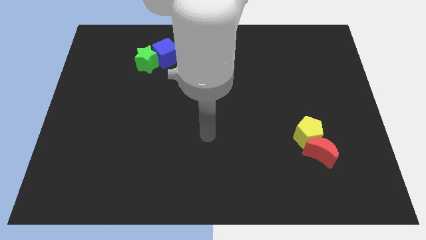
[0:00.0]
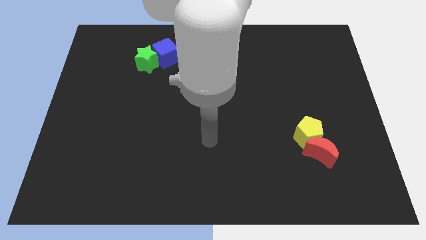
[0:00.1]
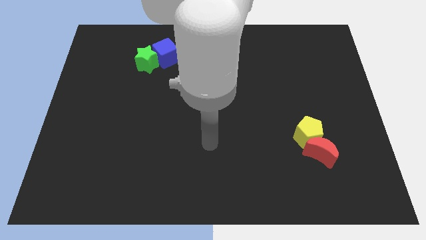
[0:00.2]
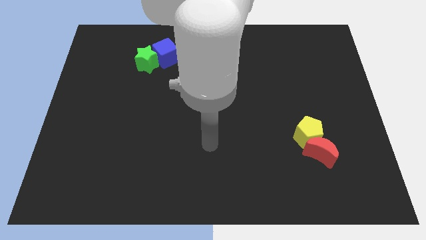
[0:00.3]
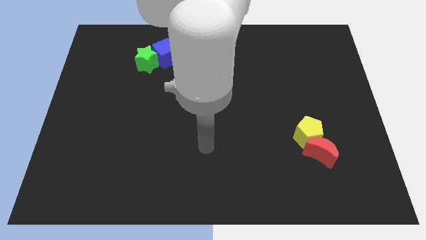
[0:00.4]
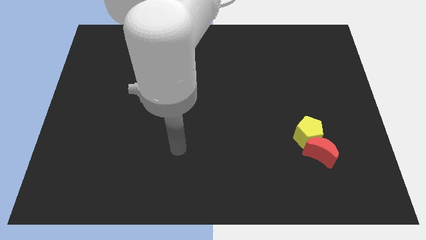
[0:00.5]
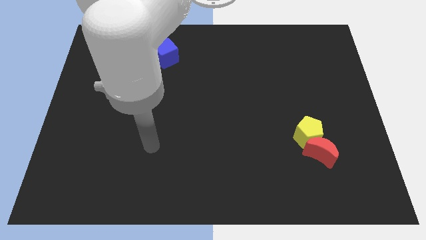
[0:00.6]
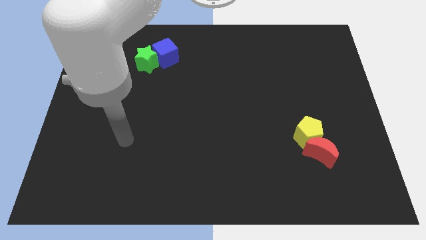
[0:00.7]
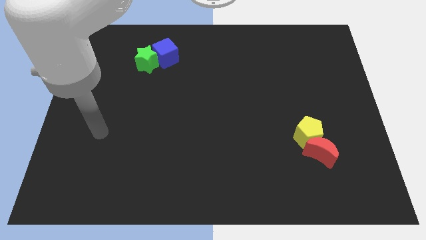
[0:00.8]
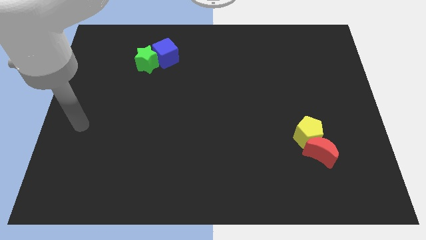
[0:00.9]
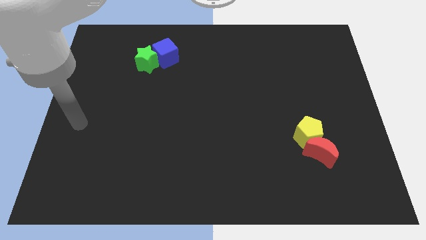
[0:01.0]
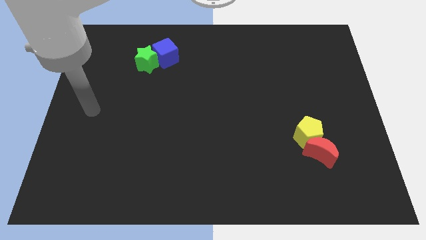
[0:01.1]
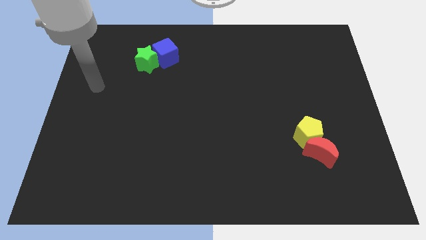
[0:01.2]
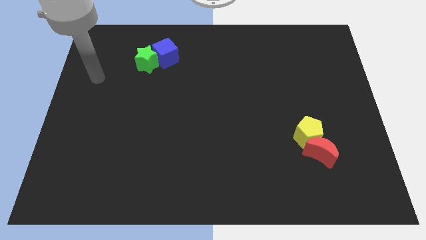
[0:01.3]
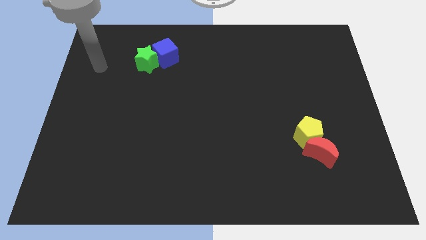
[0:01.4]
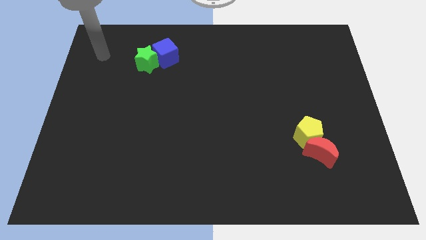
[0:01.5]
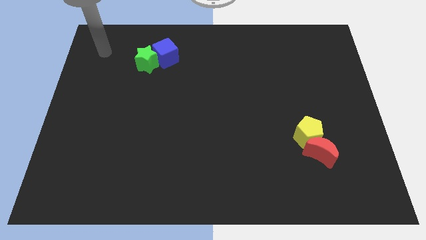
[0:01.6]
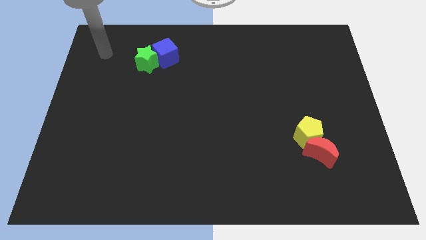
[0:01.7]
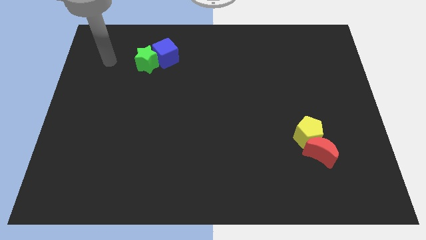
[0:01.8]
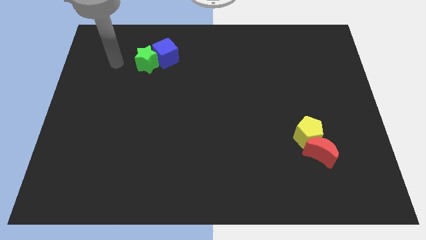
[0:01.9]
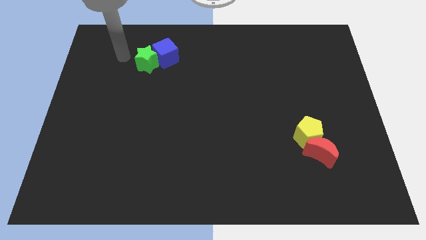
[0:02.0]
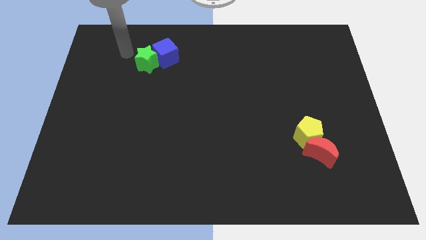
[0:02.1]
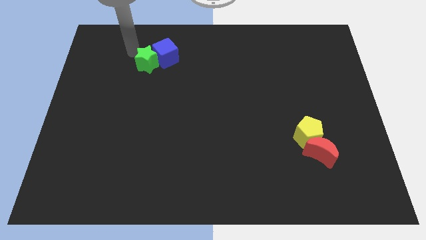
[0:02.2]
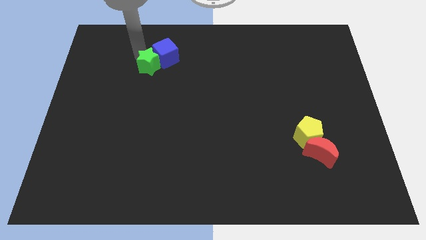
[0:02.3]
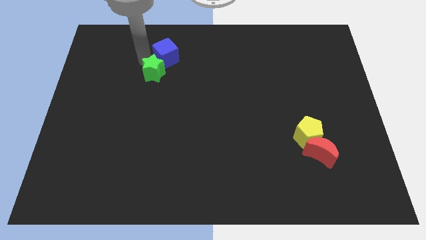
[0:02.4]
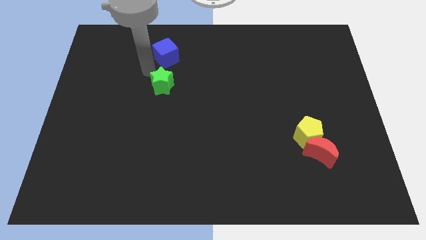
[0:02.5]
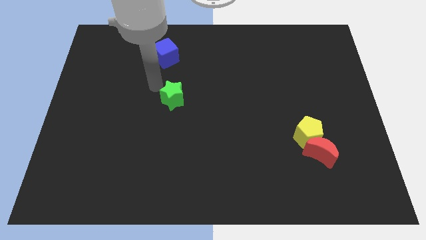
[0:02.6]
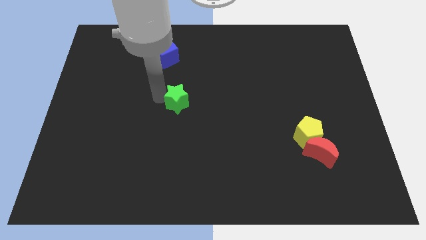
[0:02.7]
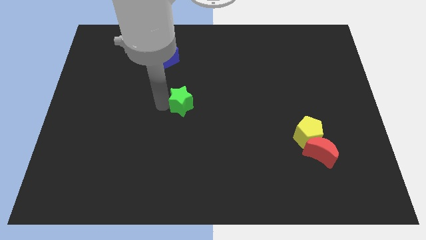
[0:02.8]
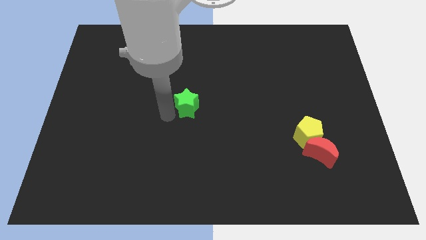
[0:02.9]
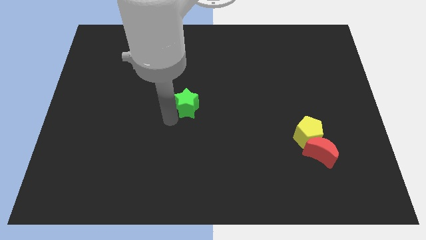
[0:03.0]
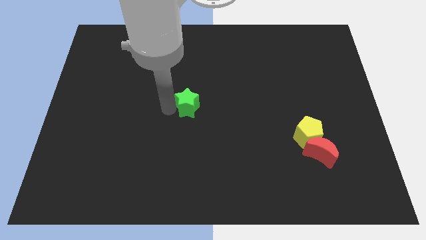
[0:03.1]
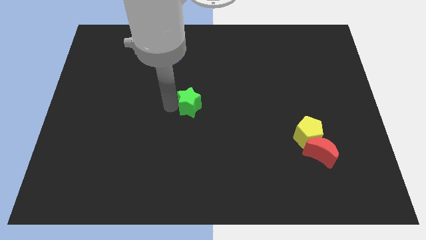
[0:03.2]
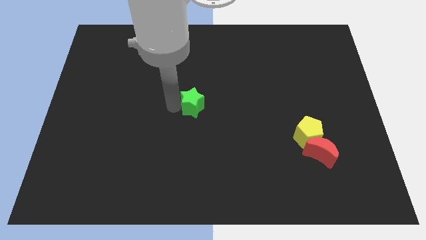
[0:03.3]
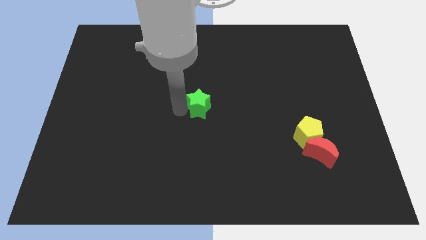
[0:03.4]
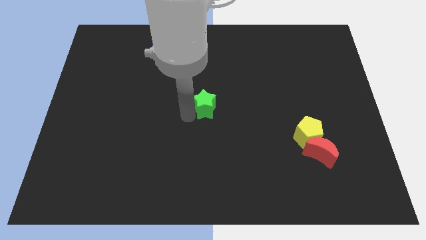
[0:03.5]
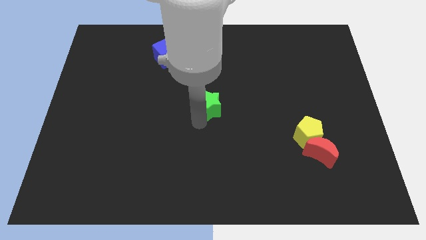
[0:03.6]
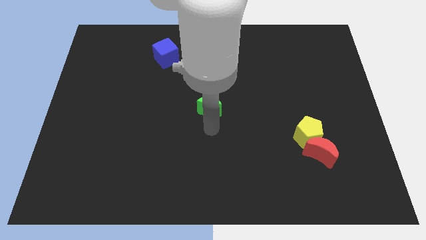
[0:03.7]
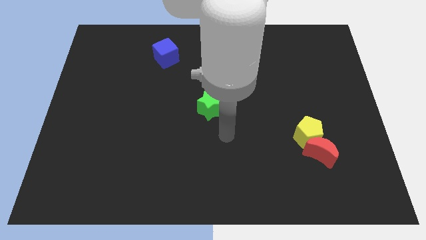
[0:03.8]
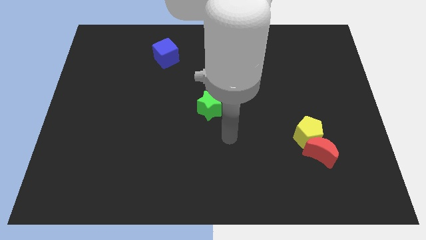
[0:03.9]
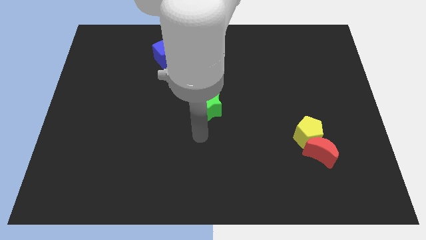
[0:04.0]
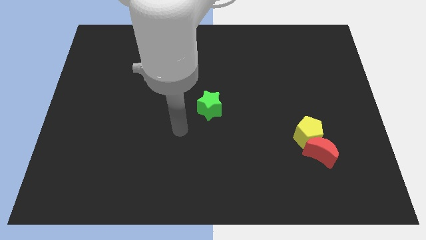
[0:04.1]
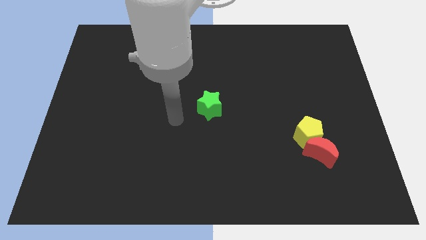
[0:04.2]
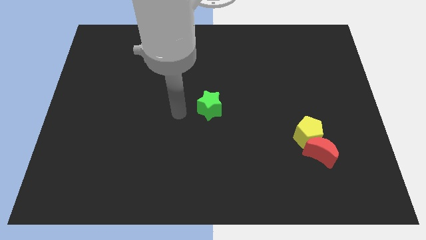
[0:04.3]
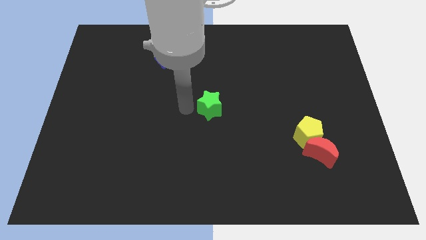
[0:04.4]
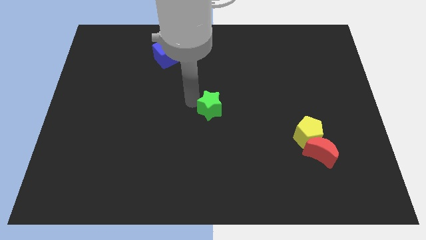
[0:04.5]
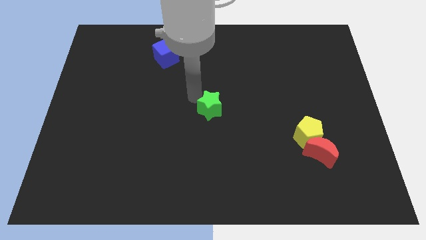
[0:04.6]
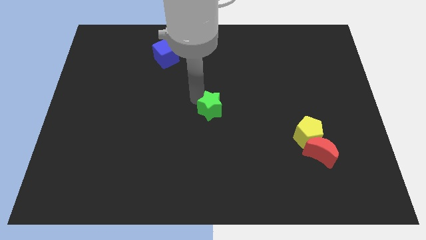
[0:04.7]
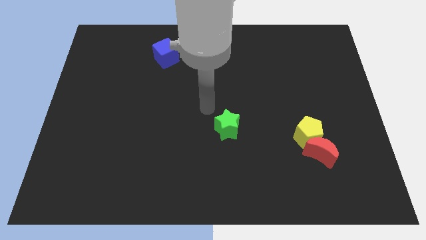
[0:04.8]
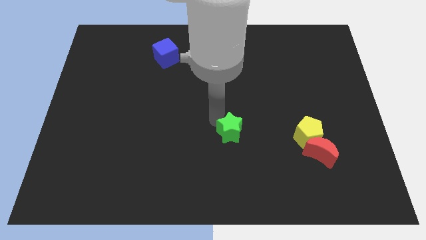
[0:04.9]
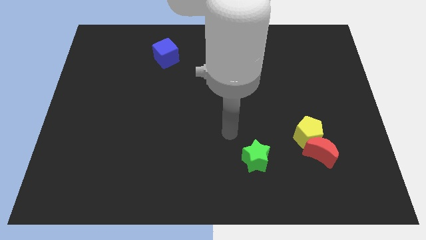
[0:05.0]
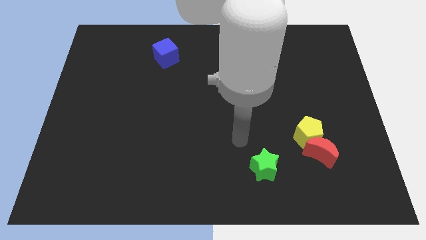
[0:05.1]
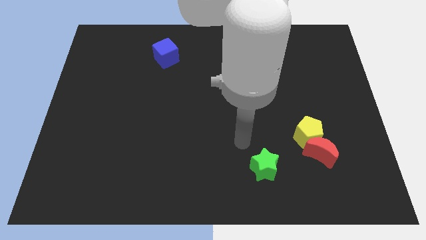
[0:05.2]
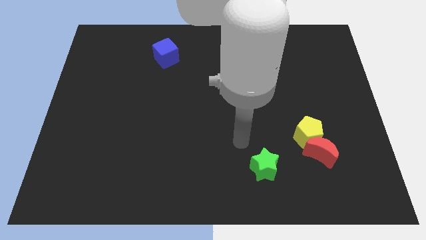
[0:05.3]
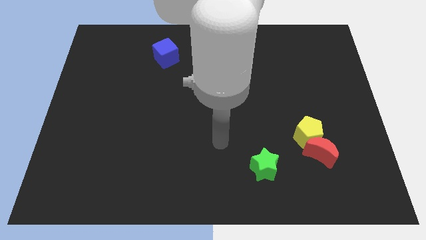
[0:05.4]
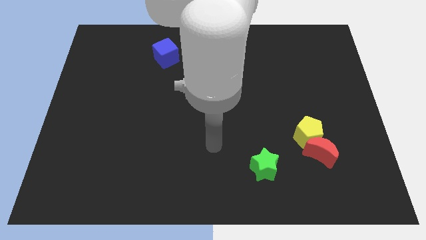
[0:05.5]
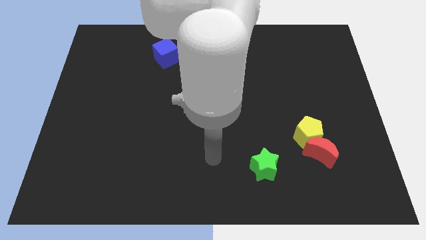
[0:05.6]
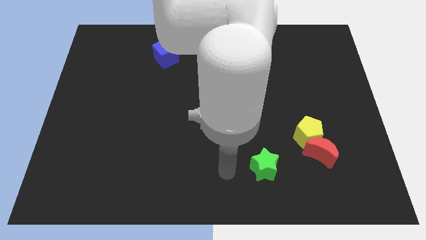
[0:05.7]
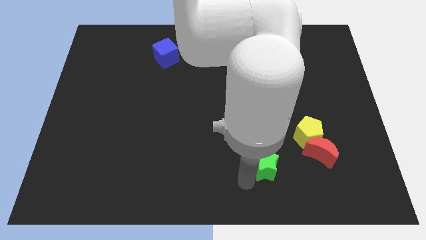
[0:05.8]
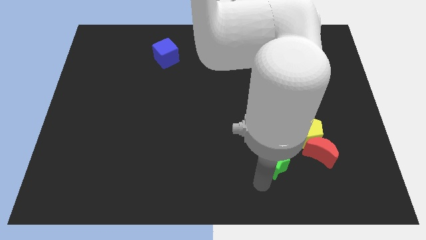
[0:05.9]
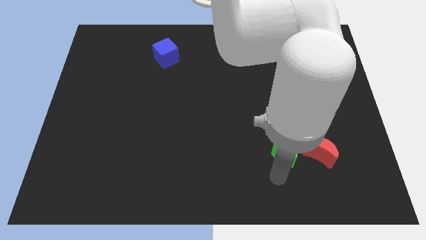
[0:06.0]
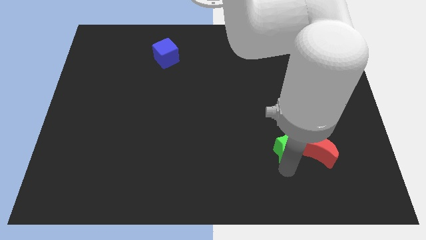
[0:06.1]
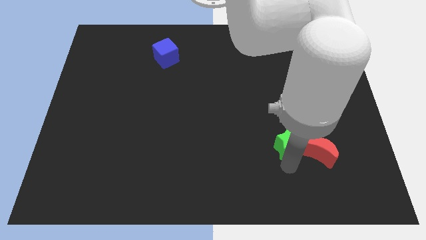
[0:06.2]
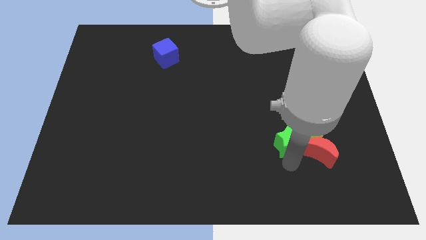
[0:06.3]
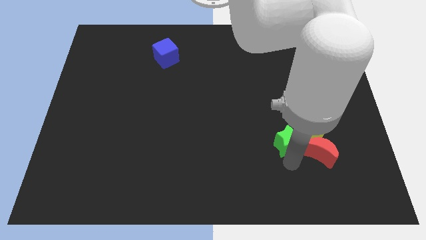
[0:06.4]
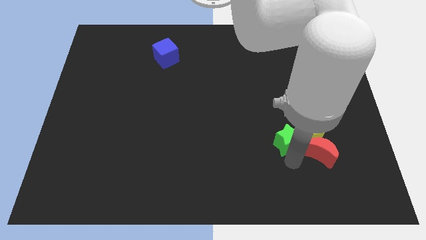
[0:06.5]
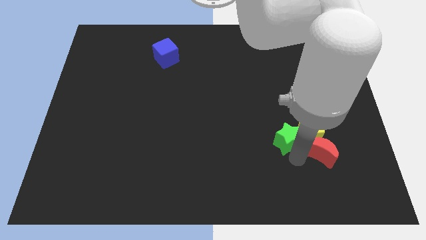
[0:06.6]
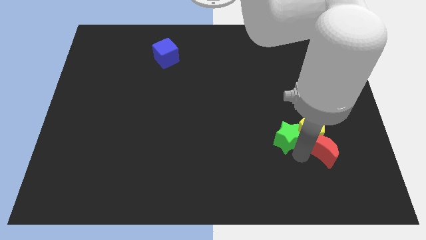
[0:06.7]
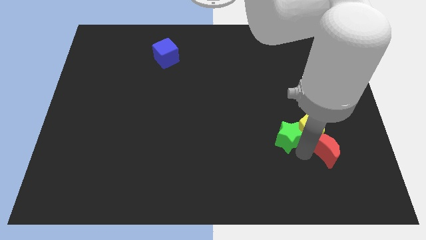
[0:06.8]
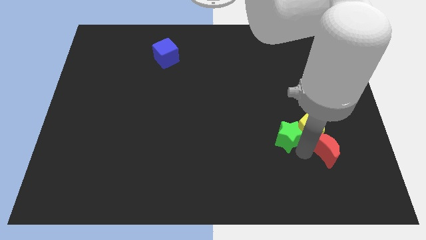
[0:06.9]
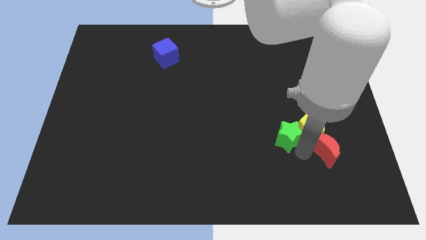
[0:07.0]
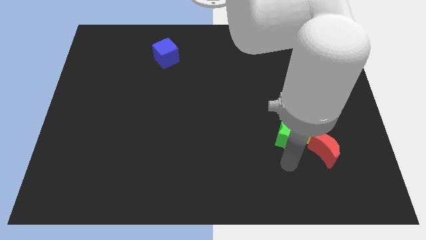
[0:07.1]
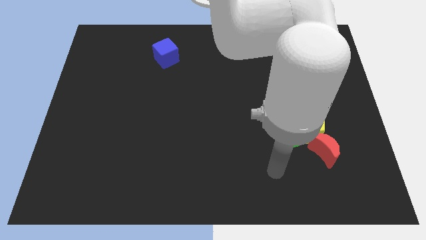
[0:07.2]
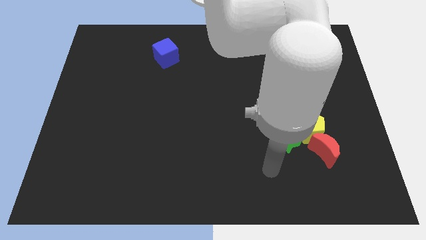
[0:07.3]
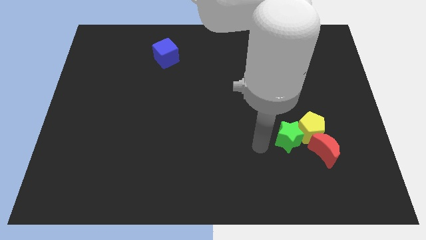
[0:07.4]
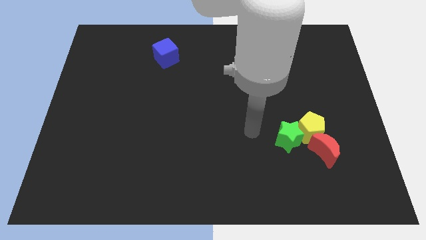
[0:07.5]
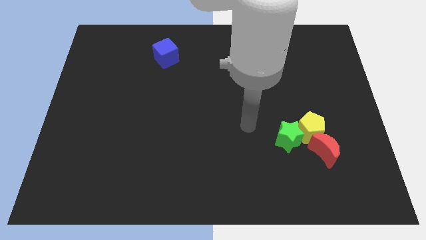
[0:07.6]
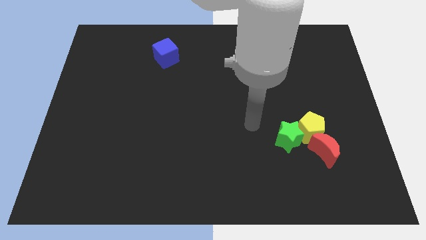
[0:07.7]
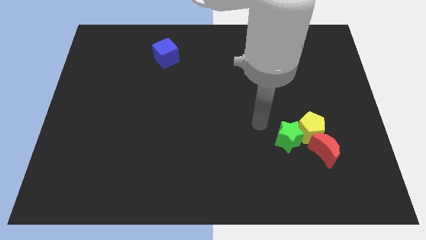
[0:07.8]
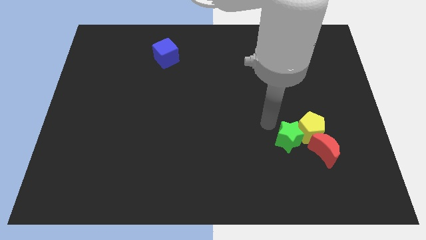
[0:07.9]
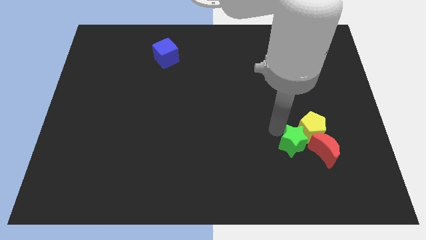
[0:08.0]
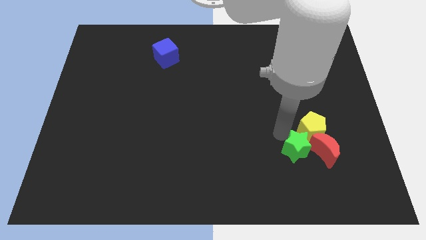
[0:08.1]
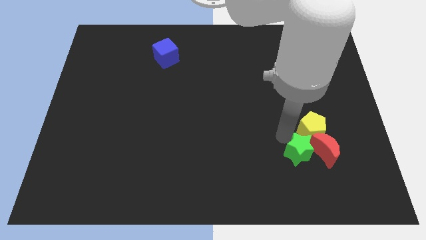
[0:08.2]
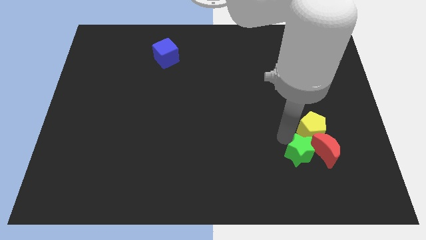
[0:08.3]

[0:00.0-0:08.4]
slide the green block next to the red moon
